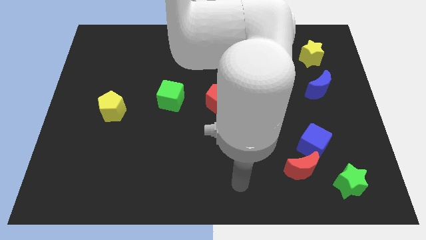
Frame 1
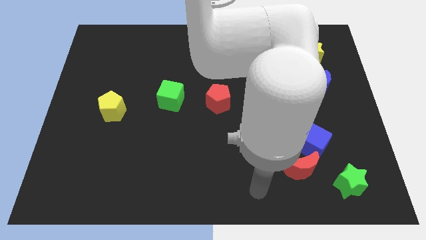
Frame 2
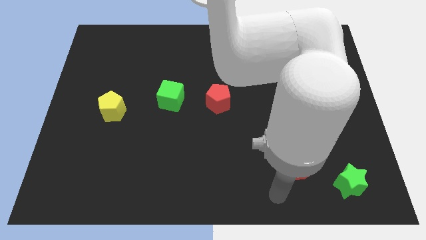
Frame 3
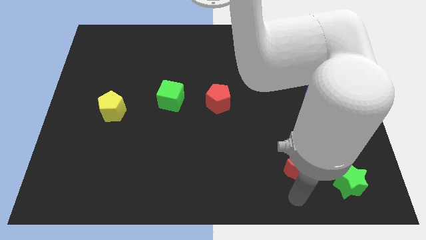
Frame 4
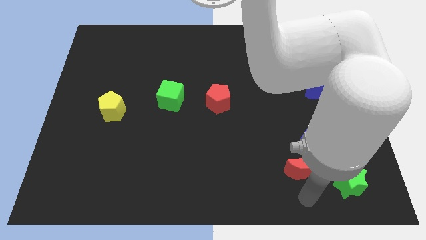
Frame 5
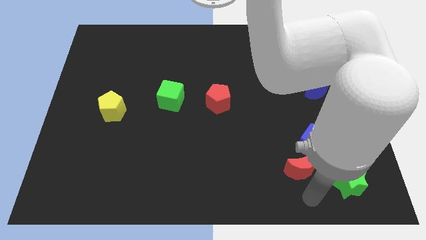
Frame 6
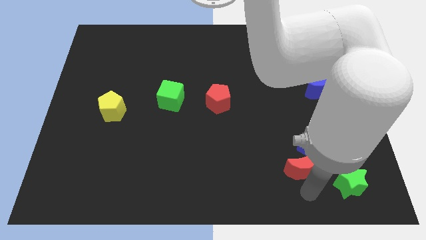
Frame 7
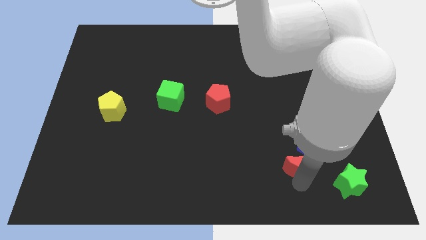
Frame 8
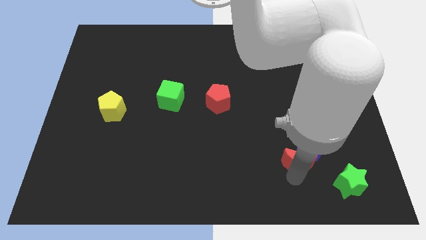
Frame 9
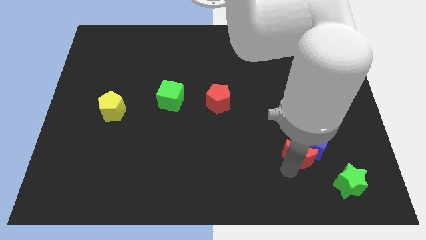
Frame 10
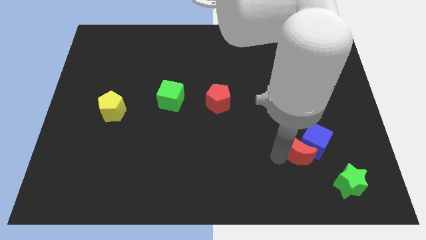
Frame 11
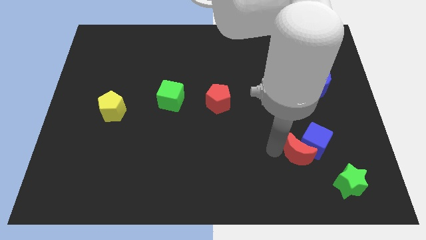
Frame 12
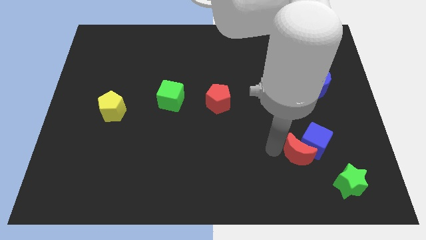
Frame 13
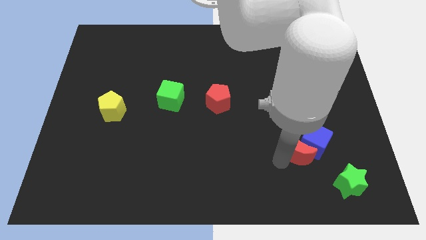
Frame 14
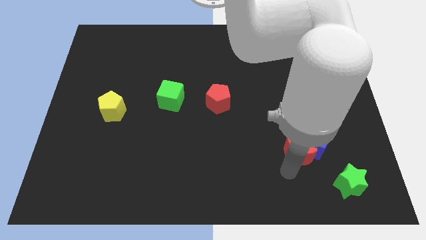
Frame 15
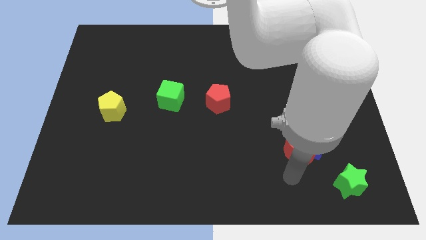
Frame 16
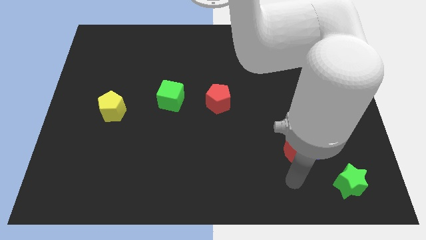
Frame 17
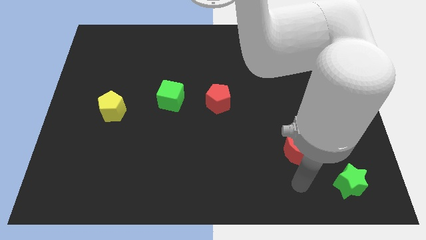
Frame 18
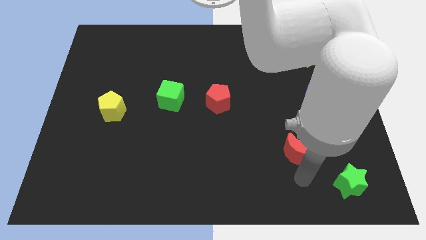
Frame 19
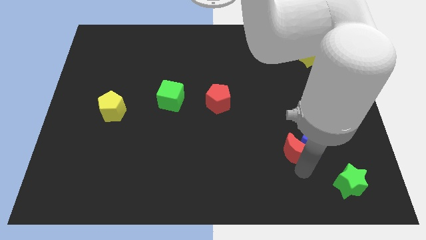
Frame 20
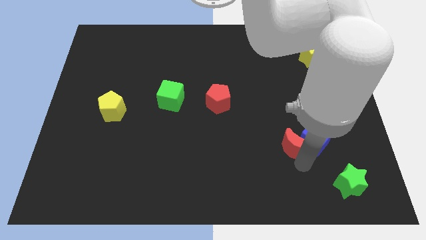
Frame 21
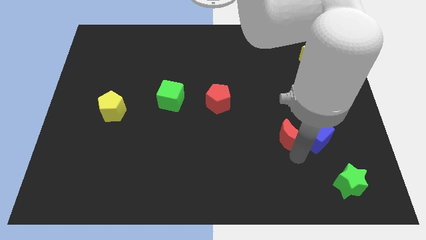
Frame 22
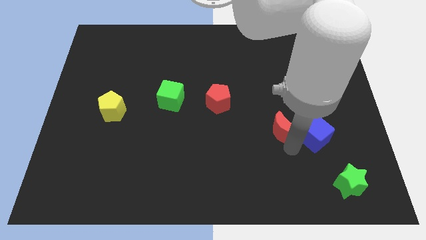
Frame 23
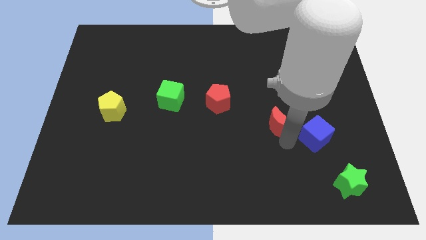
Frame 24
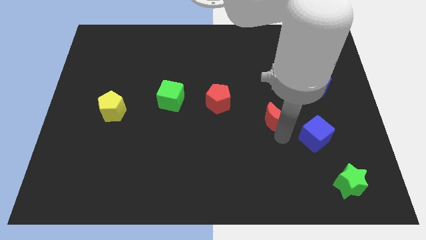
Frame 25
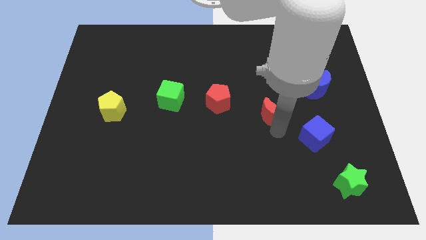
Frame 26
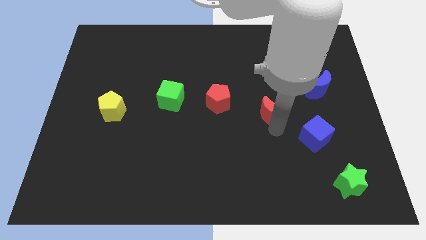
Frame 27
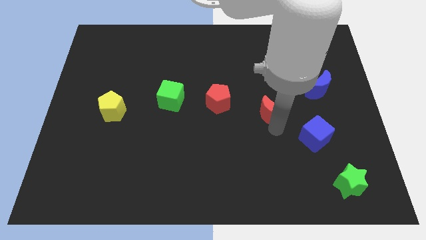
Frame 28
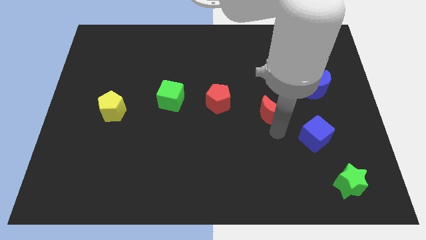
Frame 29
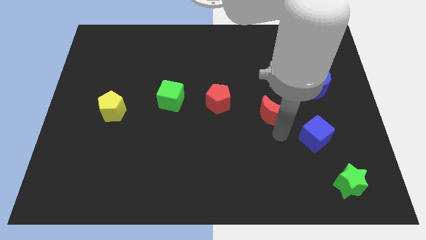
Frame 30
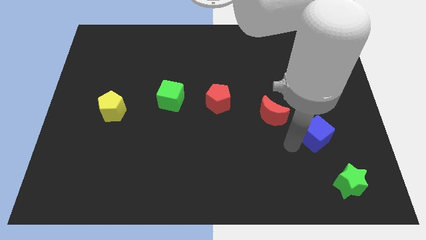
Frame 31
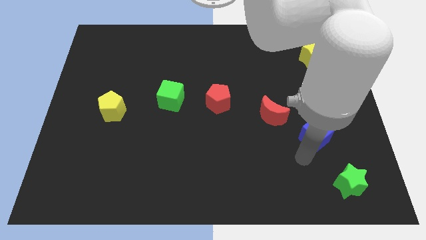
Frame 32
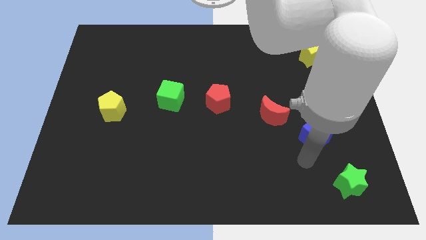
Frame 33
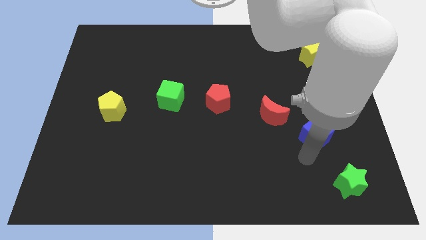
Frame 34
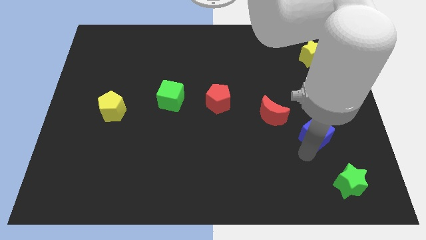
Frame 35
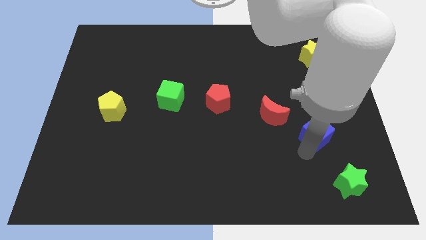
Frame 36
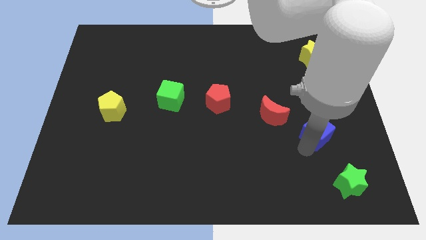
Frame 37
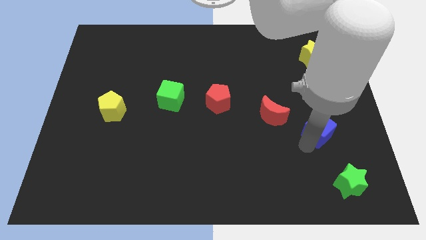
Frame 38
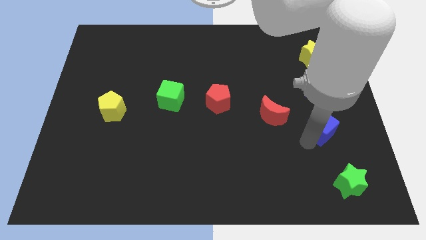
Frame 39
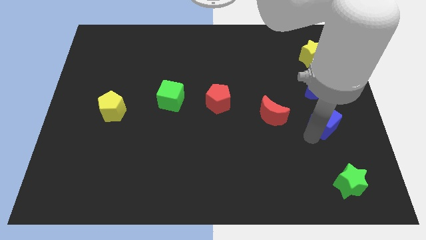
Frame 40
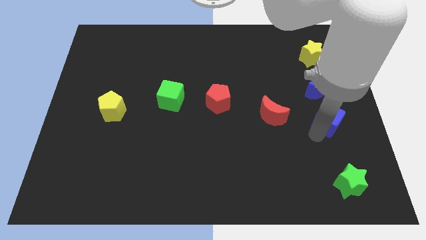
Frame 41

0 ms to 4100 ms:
separate red moon and blue cube

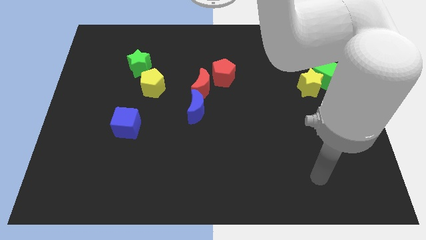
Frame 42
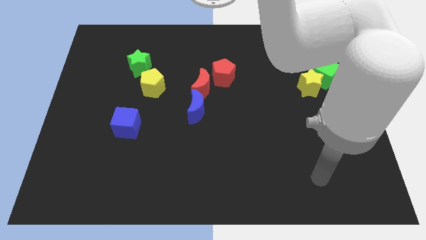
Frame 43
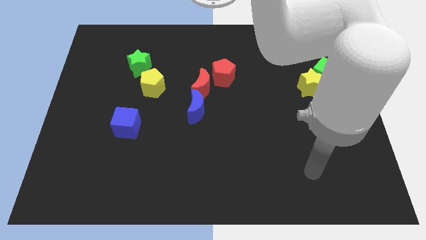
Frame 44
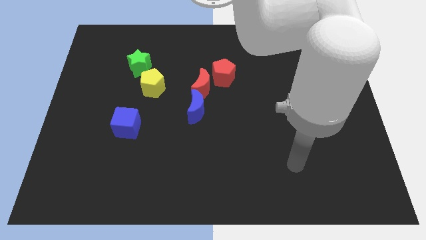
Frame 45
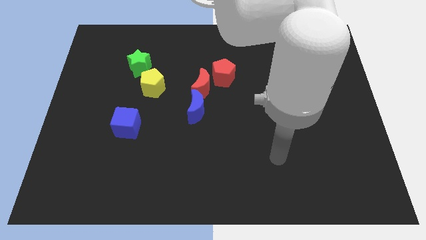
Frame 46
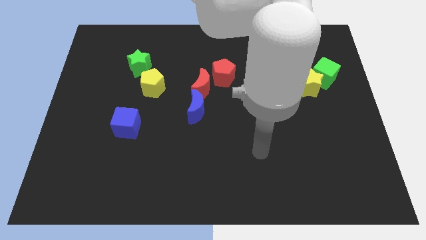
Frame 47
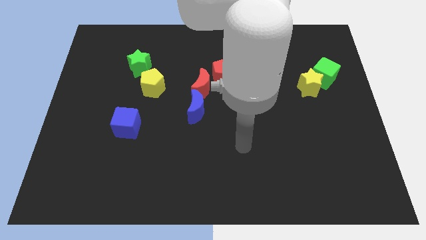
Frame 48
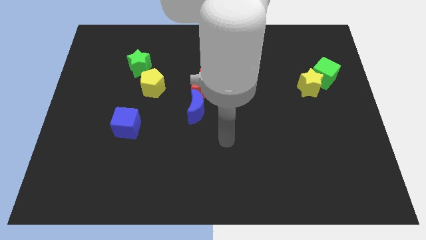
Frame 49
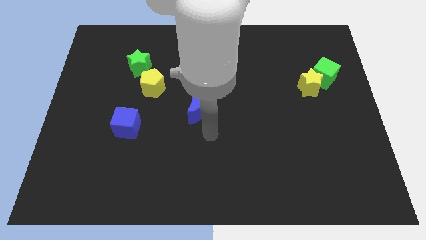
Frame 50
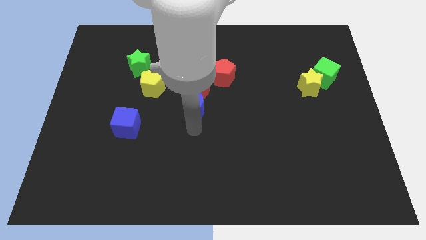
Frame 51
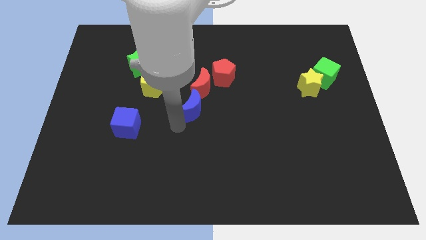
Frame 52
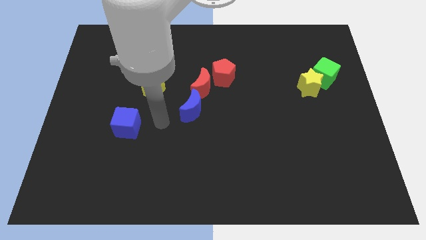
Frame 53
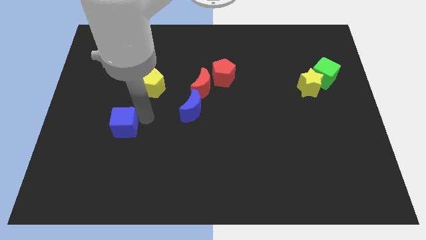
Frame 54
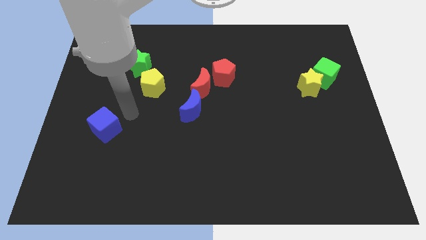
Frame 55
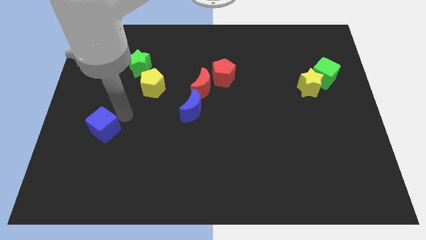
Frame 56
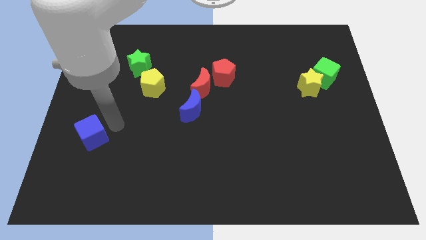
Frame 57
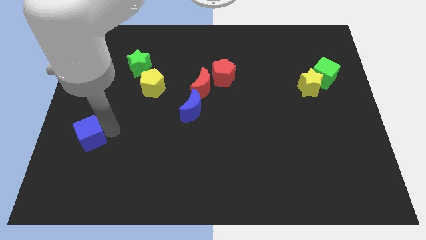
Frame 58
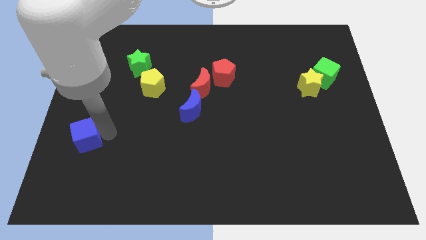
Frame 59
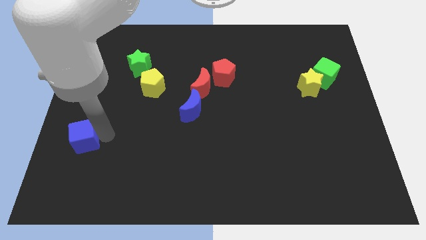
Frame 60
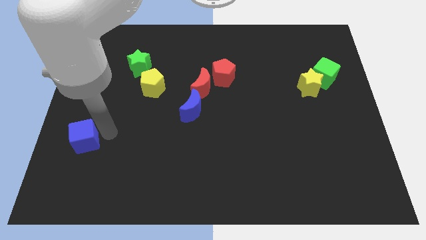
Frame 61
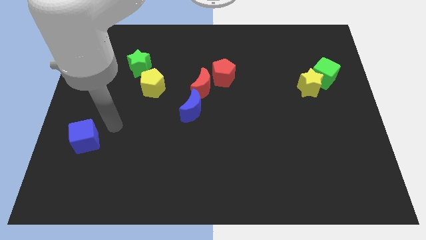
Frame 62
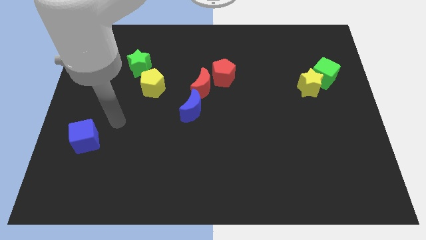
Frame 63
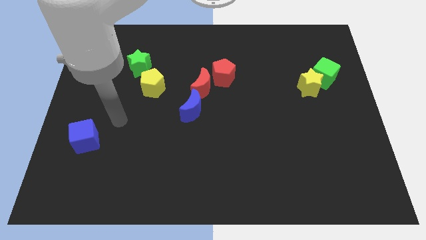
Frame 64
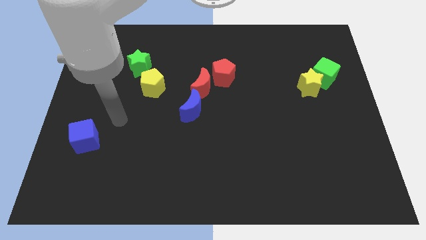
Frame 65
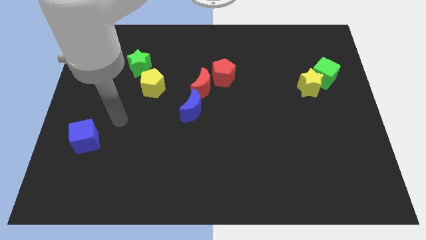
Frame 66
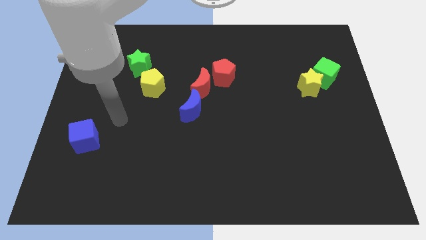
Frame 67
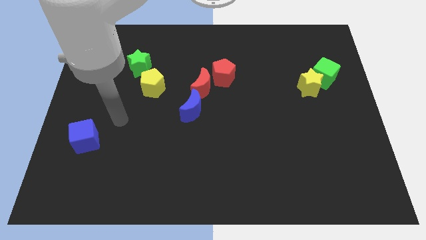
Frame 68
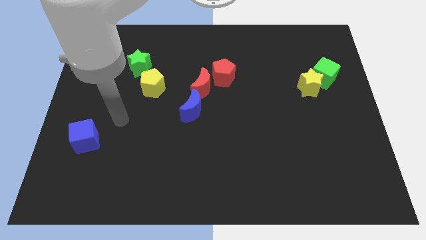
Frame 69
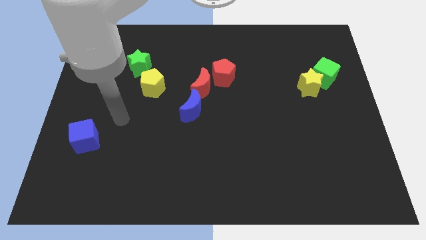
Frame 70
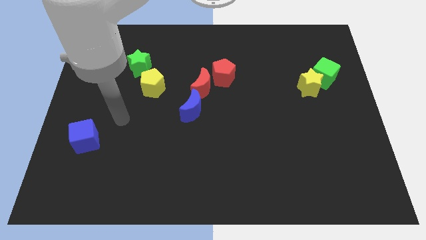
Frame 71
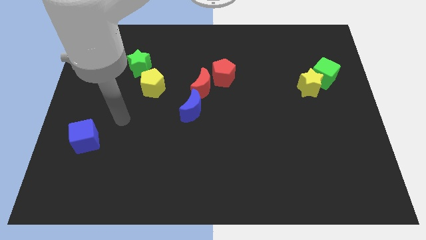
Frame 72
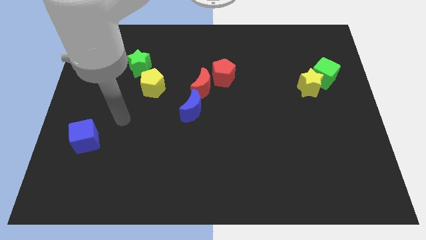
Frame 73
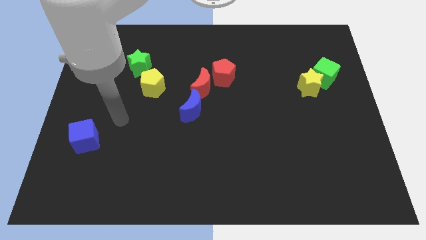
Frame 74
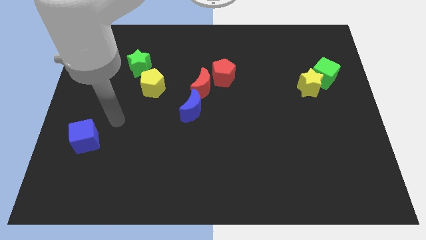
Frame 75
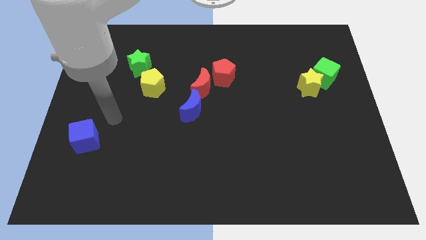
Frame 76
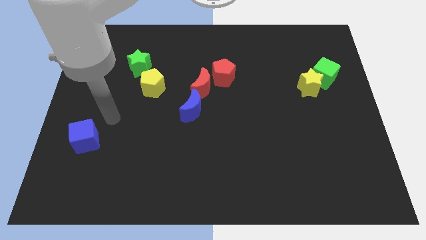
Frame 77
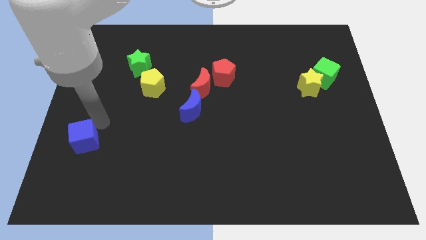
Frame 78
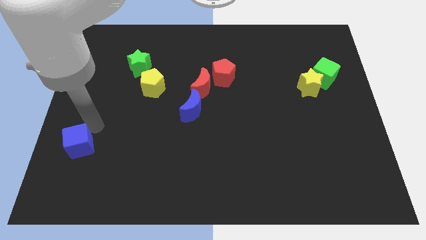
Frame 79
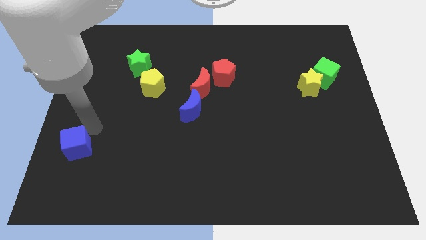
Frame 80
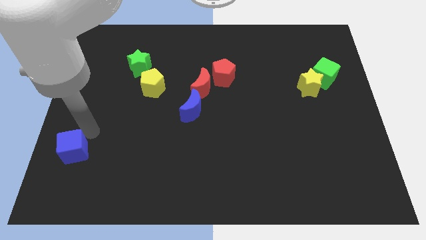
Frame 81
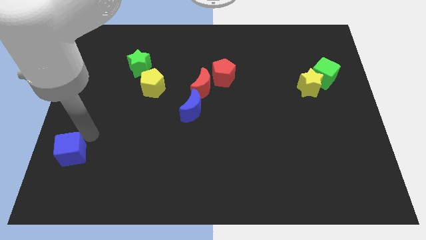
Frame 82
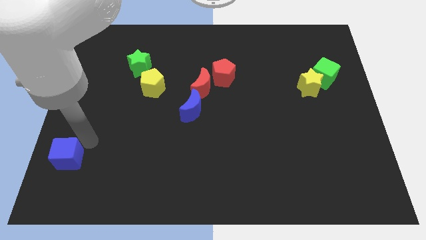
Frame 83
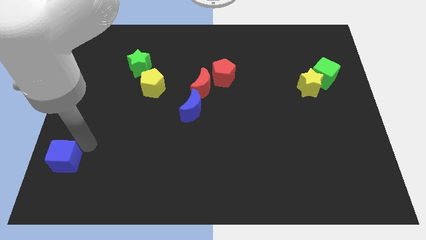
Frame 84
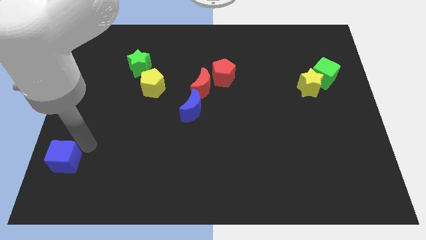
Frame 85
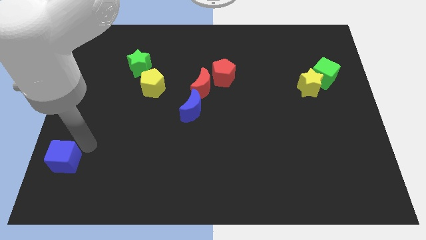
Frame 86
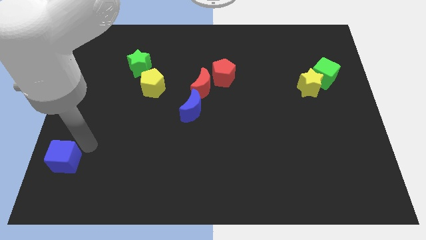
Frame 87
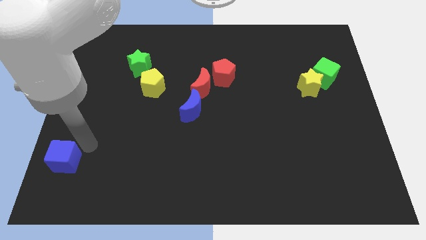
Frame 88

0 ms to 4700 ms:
move the blue cube towards the bottom left corner of the board

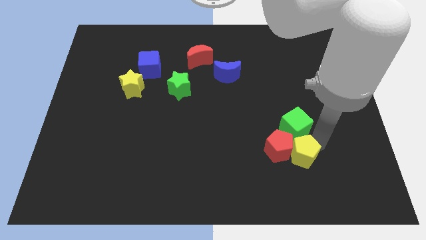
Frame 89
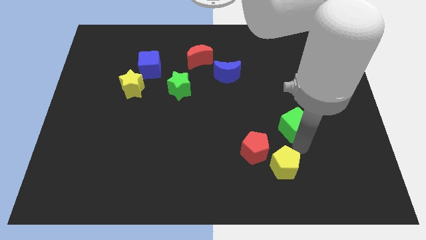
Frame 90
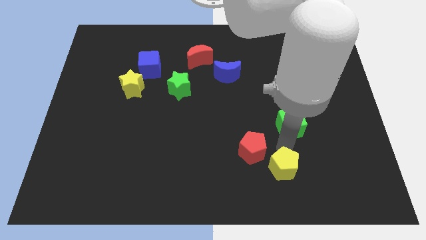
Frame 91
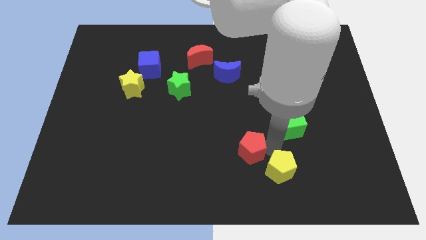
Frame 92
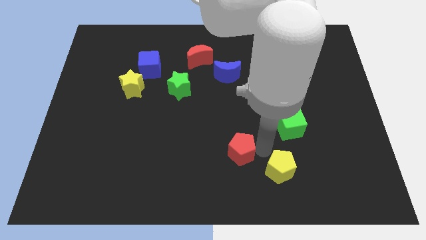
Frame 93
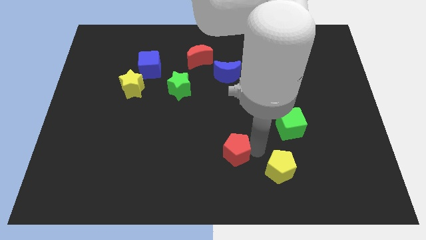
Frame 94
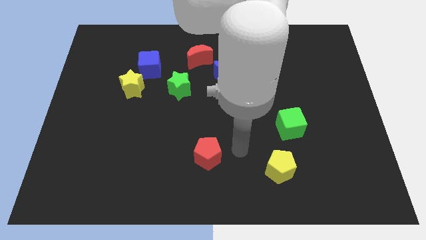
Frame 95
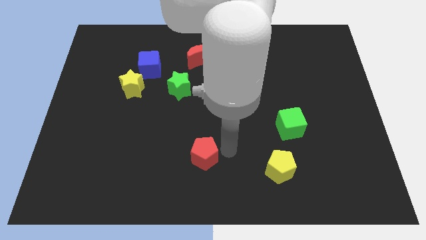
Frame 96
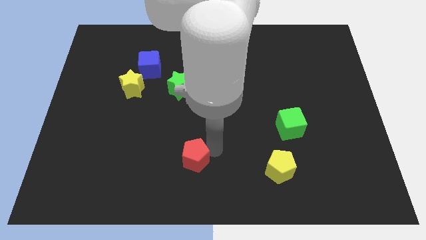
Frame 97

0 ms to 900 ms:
separate green cube and yellow pentagon
